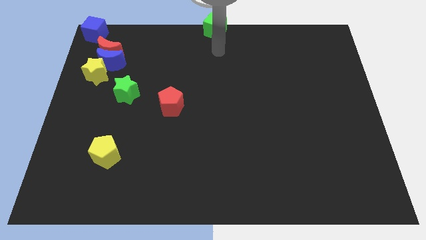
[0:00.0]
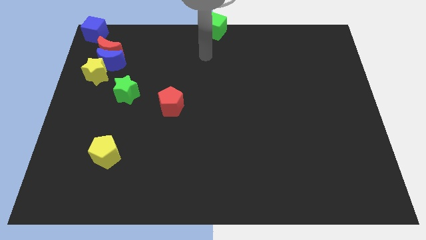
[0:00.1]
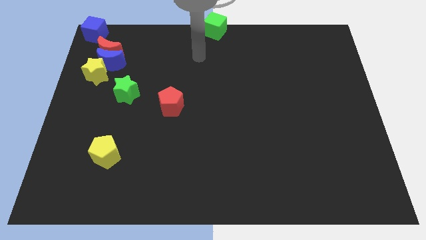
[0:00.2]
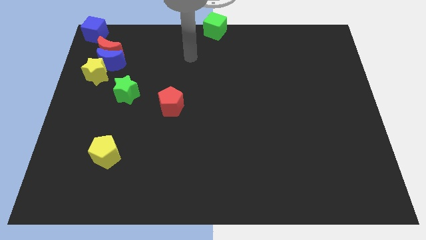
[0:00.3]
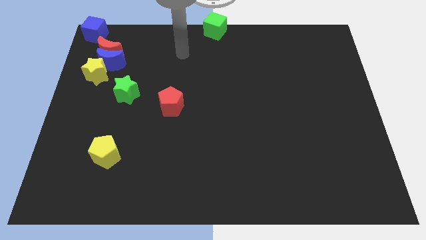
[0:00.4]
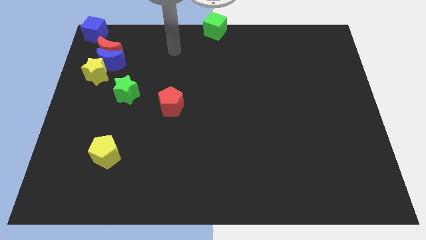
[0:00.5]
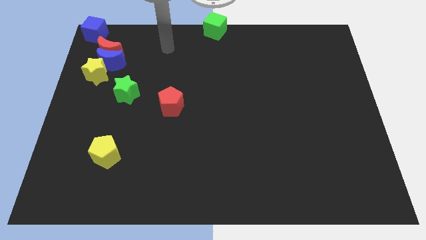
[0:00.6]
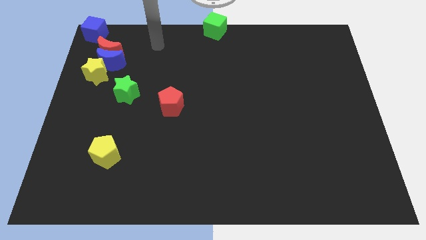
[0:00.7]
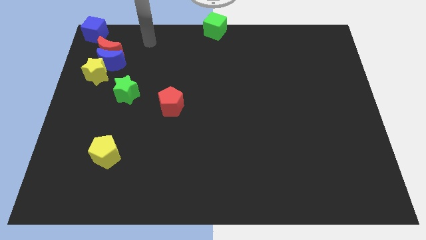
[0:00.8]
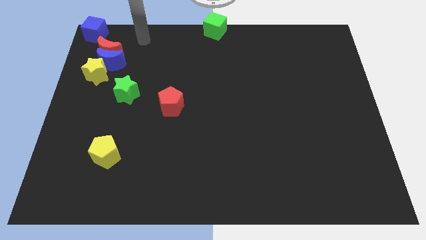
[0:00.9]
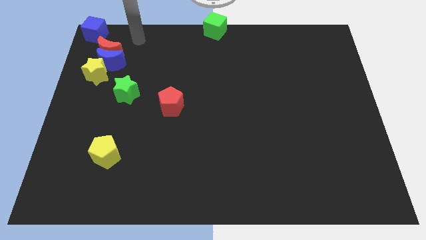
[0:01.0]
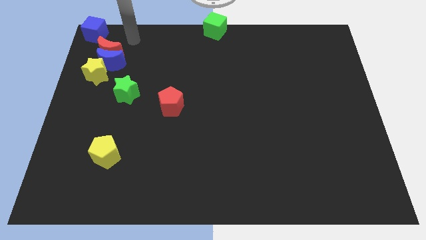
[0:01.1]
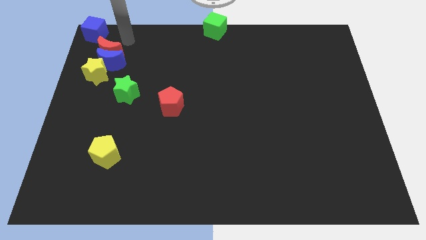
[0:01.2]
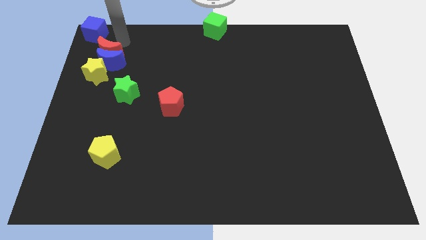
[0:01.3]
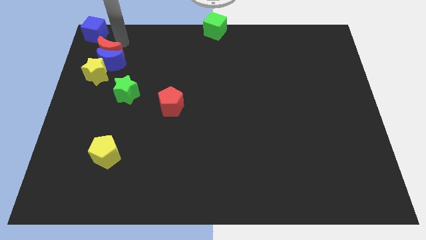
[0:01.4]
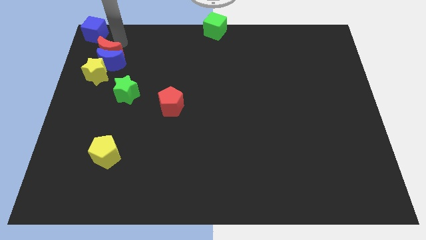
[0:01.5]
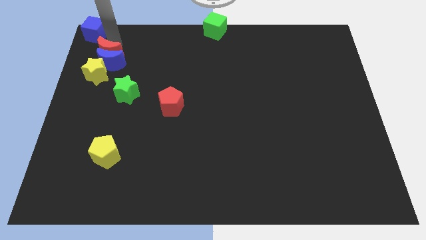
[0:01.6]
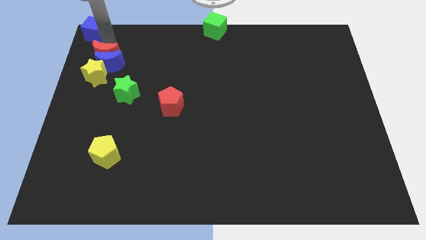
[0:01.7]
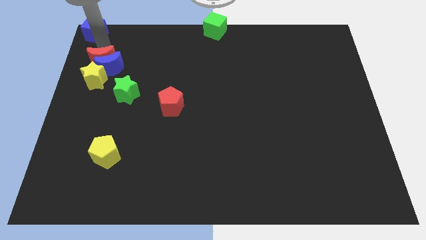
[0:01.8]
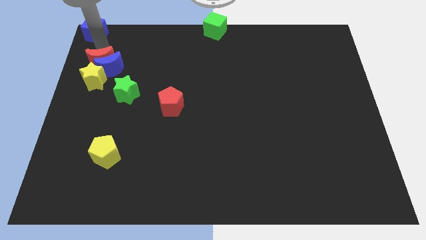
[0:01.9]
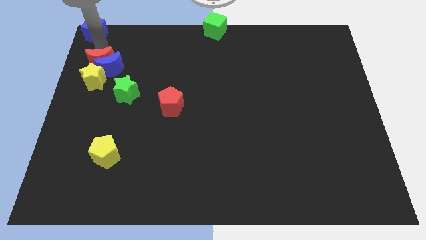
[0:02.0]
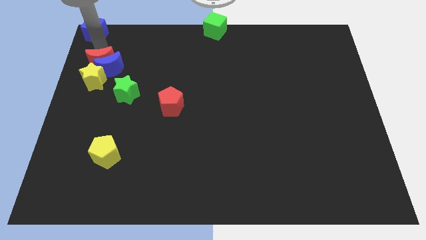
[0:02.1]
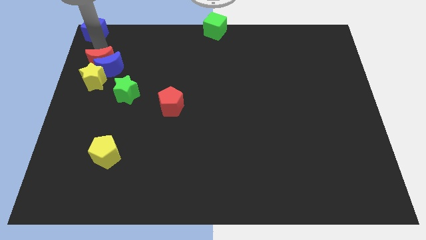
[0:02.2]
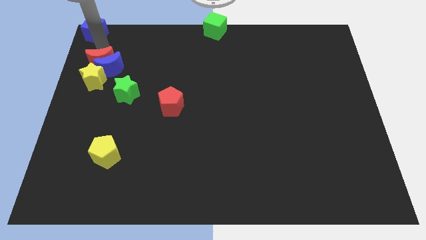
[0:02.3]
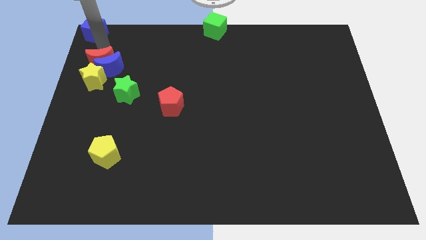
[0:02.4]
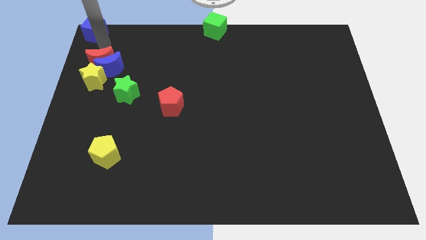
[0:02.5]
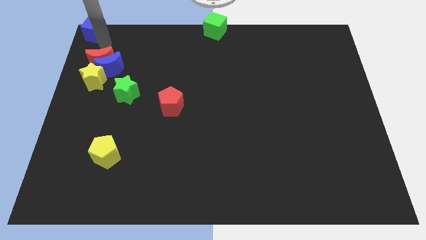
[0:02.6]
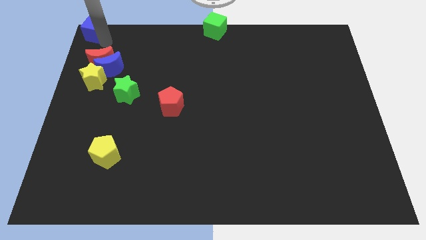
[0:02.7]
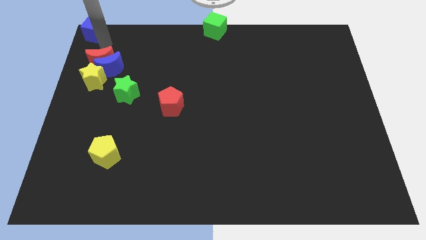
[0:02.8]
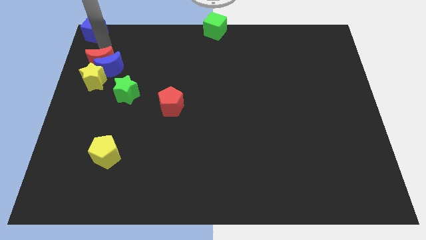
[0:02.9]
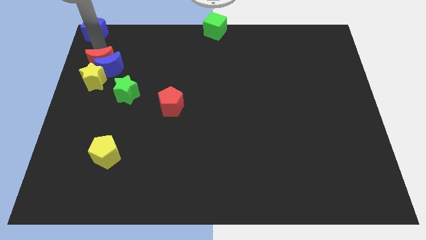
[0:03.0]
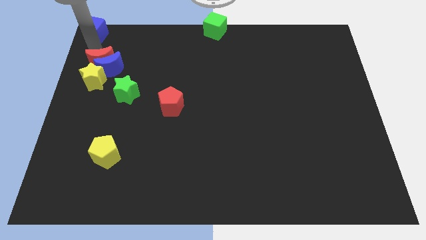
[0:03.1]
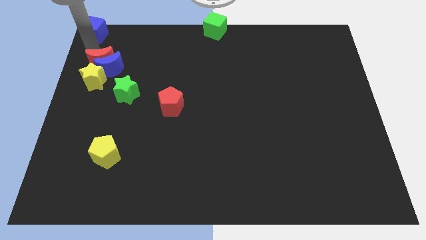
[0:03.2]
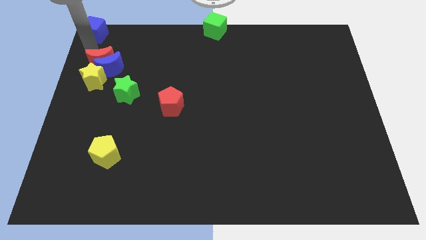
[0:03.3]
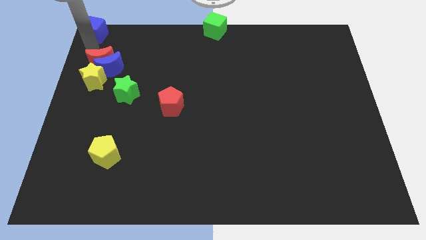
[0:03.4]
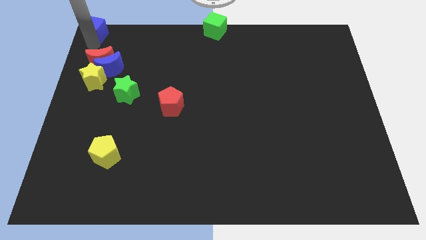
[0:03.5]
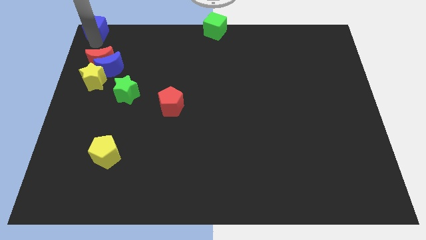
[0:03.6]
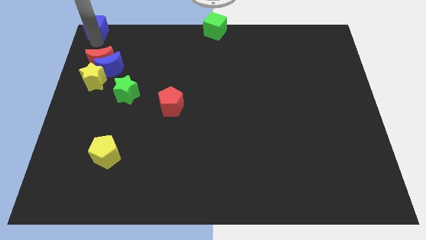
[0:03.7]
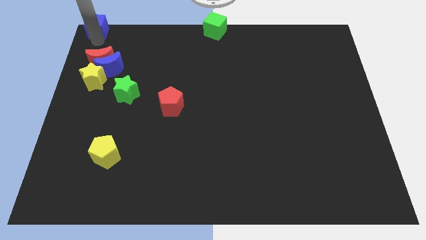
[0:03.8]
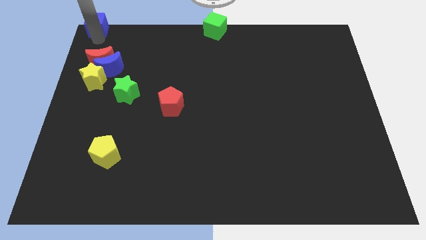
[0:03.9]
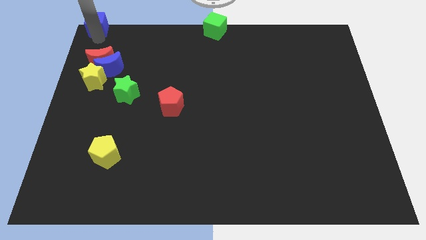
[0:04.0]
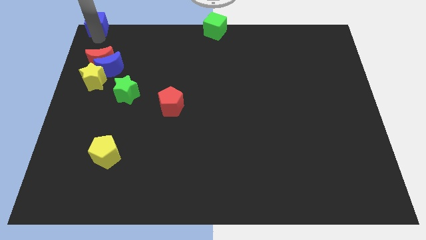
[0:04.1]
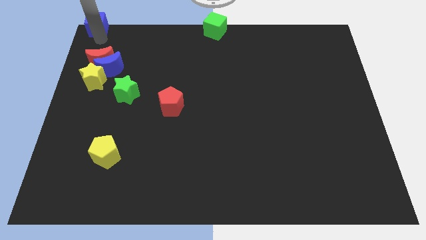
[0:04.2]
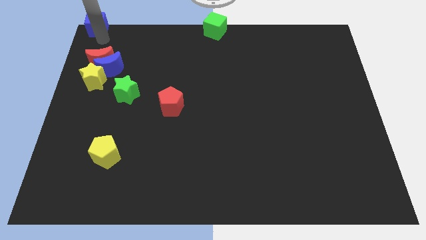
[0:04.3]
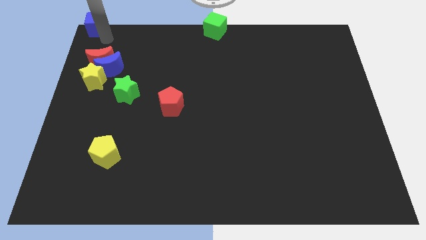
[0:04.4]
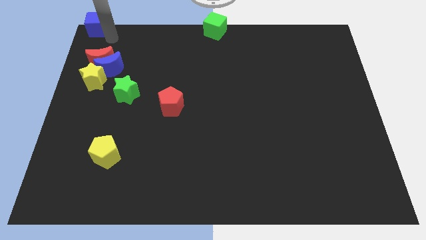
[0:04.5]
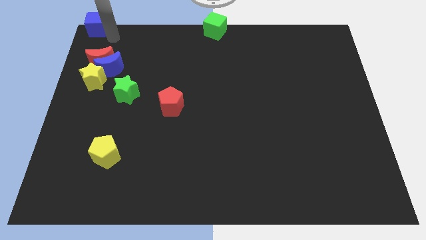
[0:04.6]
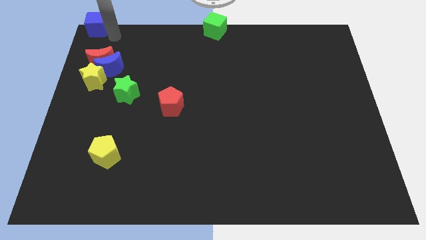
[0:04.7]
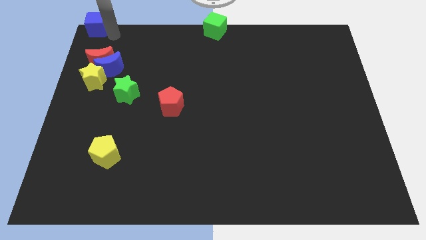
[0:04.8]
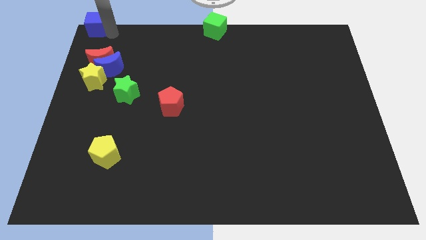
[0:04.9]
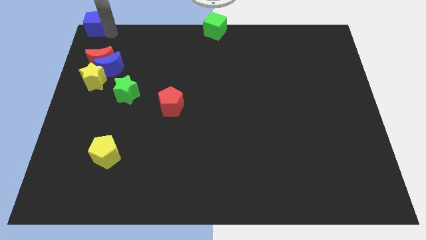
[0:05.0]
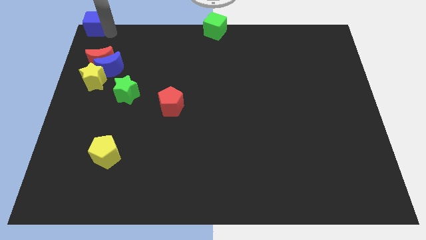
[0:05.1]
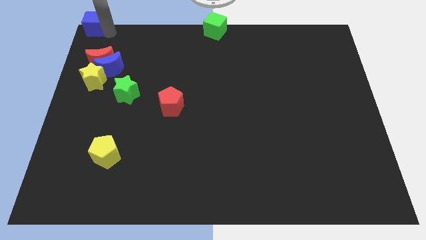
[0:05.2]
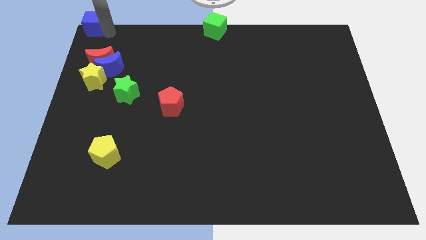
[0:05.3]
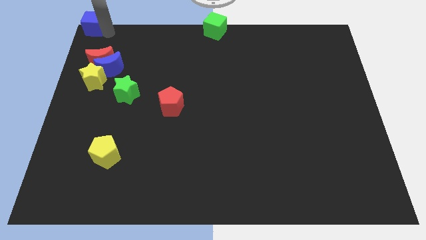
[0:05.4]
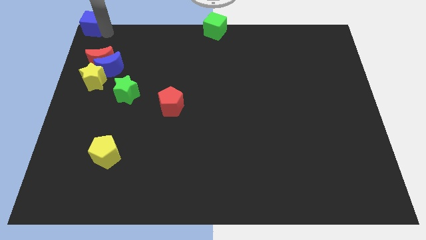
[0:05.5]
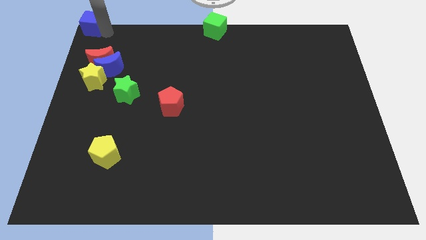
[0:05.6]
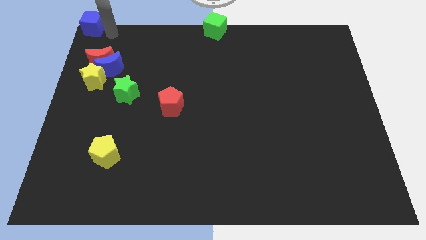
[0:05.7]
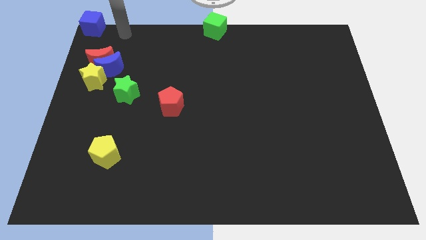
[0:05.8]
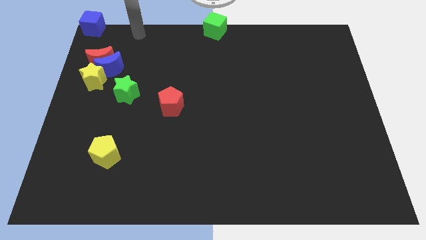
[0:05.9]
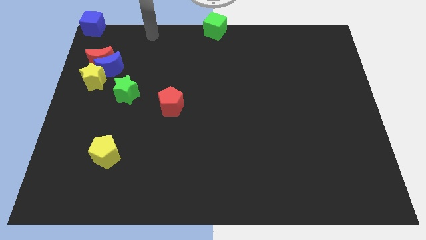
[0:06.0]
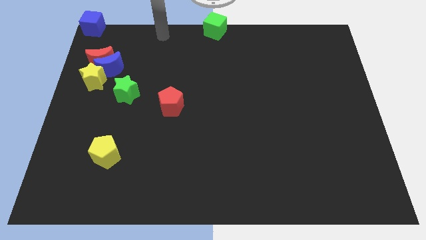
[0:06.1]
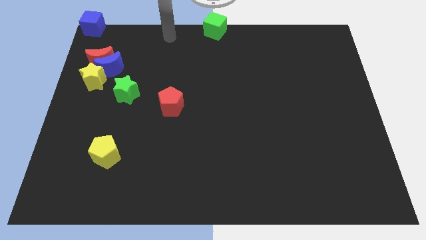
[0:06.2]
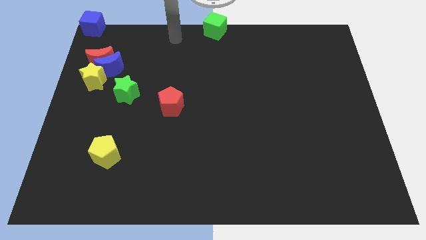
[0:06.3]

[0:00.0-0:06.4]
adjust the blue cube parallel to the green cube

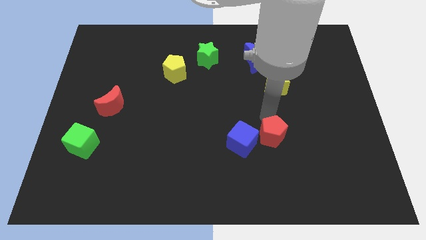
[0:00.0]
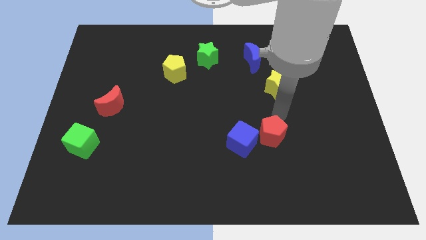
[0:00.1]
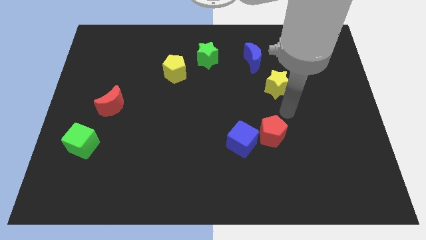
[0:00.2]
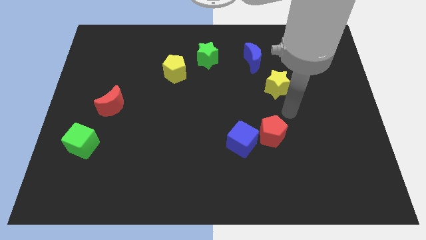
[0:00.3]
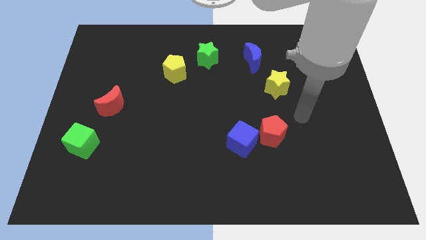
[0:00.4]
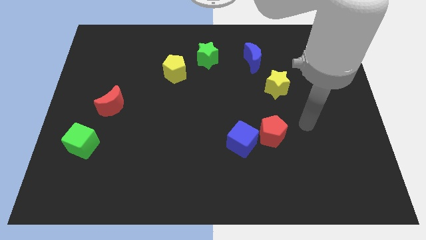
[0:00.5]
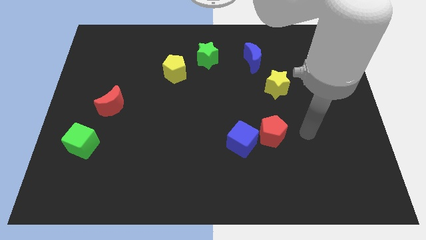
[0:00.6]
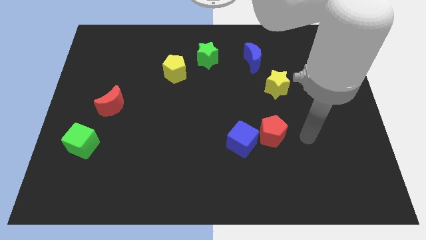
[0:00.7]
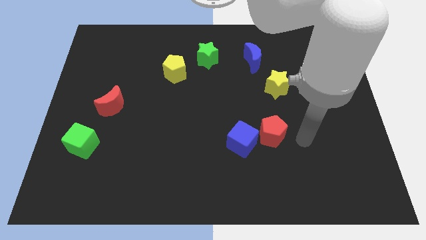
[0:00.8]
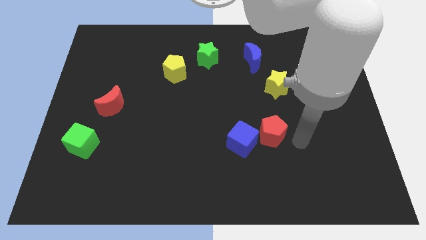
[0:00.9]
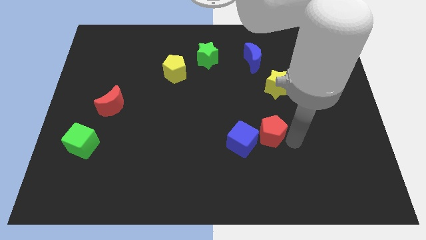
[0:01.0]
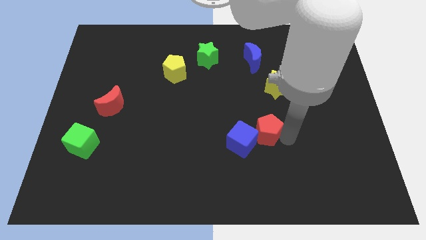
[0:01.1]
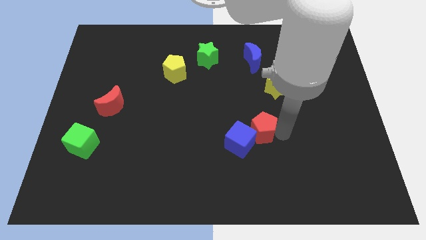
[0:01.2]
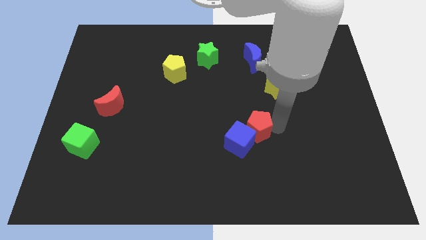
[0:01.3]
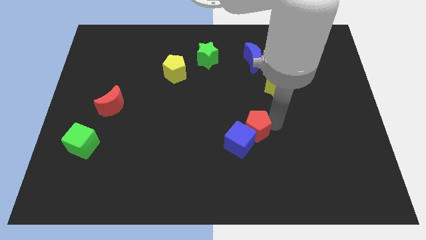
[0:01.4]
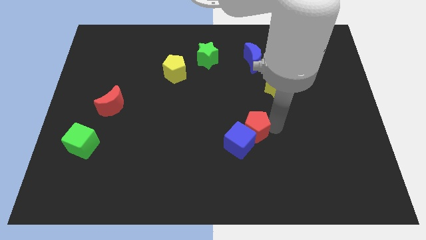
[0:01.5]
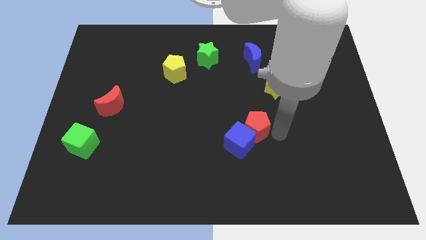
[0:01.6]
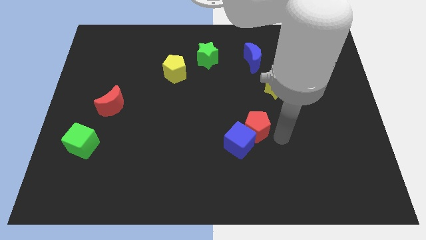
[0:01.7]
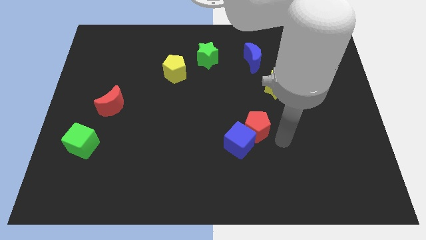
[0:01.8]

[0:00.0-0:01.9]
place red pentagon diagonally above blue cube

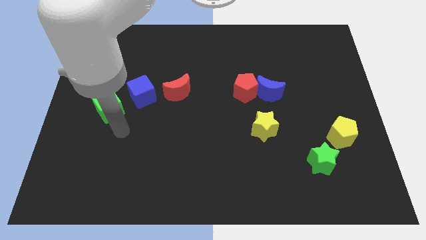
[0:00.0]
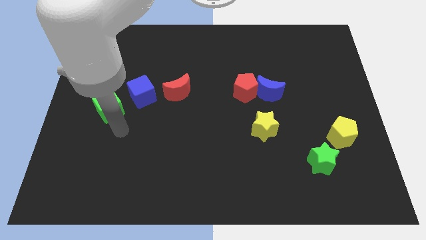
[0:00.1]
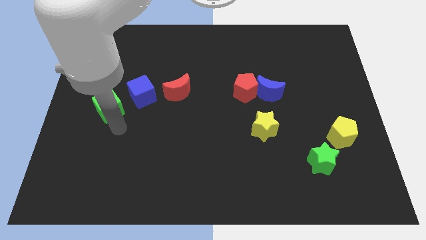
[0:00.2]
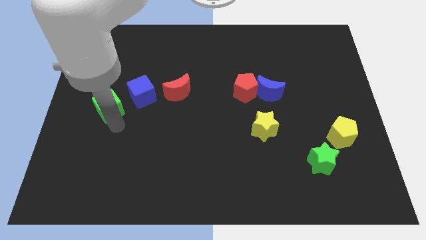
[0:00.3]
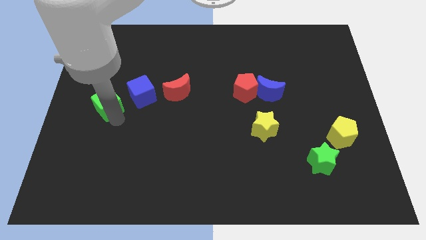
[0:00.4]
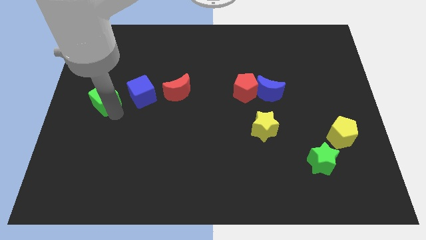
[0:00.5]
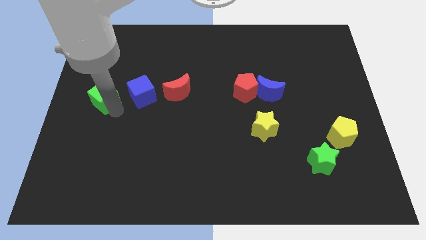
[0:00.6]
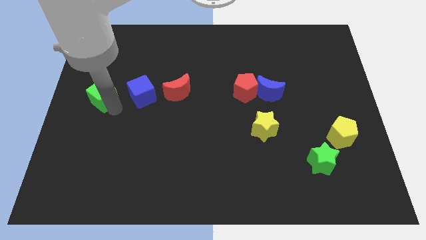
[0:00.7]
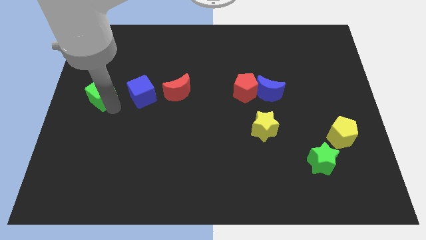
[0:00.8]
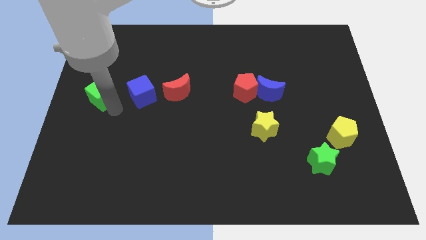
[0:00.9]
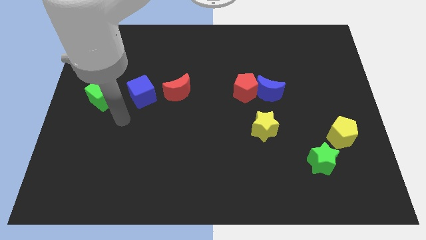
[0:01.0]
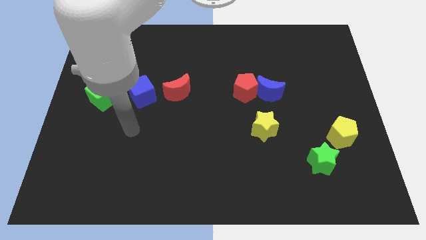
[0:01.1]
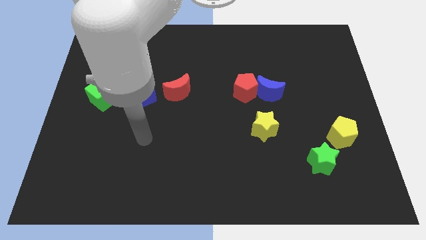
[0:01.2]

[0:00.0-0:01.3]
slightly move the green cube up
